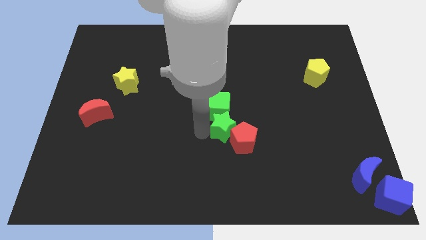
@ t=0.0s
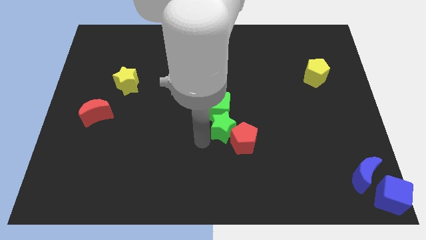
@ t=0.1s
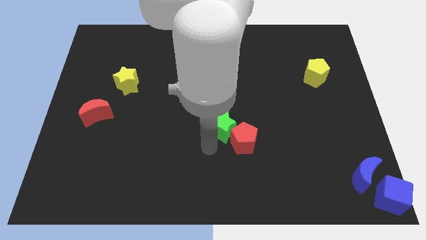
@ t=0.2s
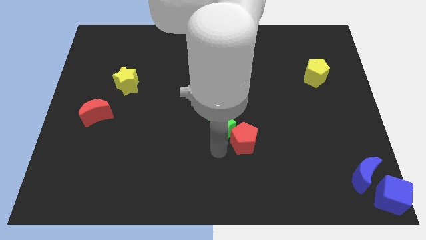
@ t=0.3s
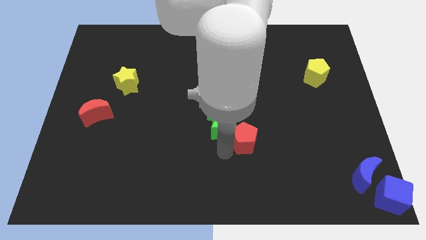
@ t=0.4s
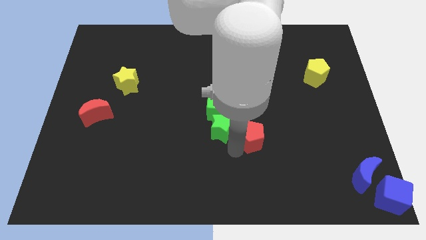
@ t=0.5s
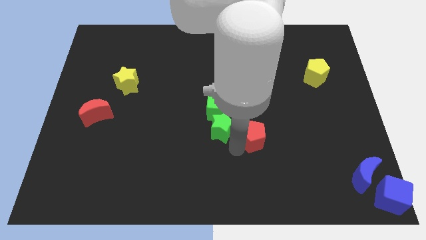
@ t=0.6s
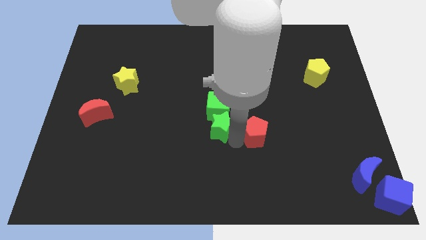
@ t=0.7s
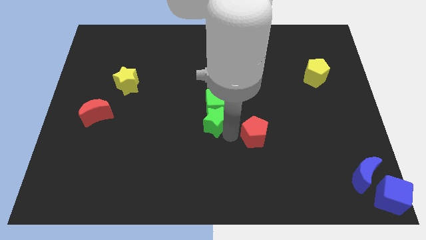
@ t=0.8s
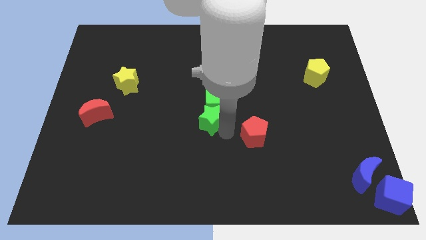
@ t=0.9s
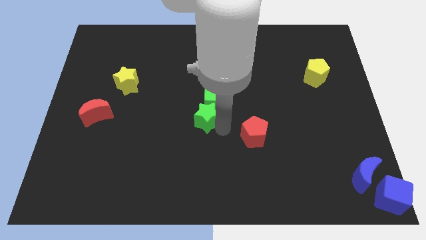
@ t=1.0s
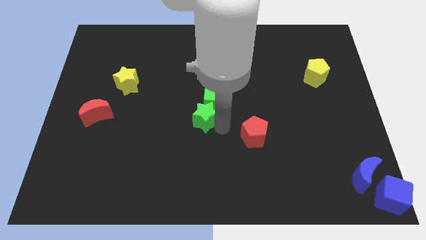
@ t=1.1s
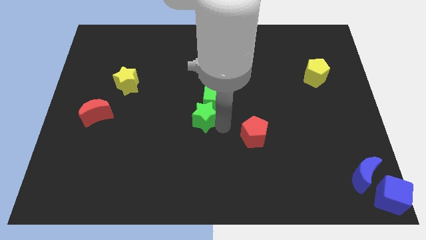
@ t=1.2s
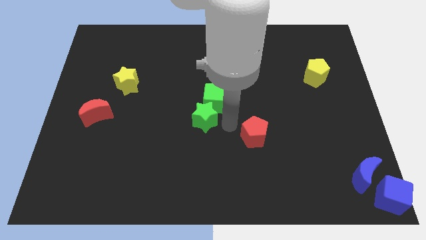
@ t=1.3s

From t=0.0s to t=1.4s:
move green block away from the red pentagon

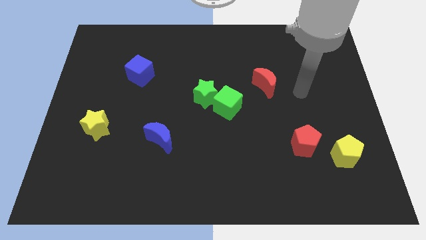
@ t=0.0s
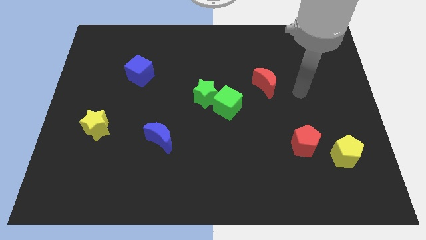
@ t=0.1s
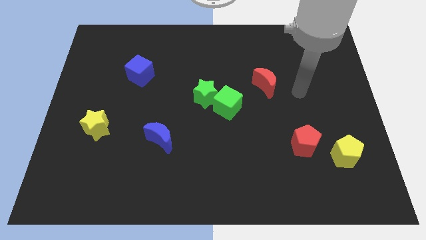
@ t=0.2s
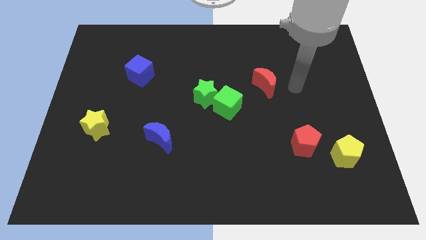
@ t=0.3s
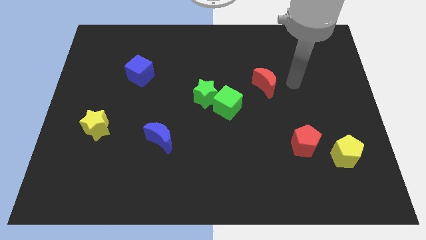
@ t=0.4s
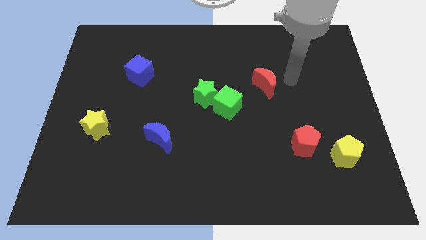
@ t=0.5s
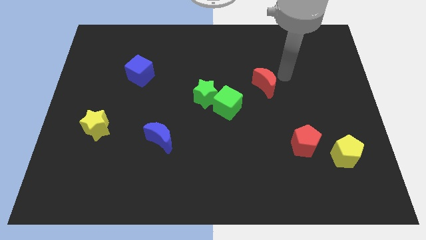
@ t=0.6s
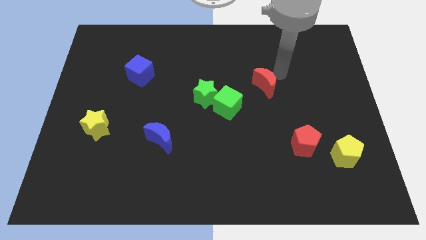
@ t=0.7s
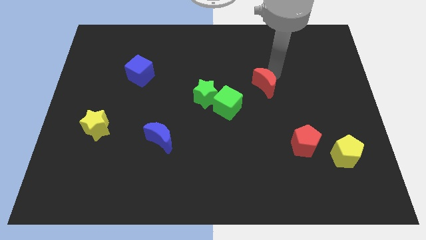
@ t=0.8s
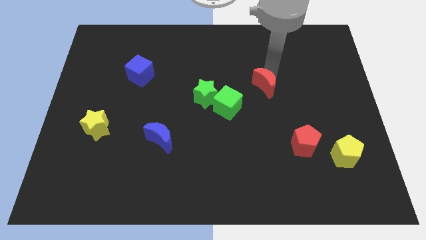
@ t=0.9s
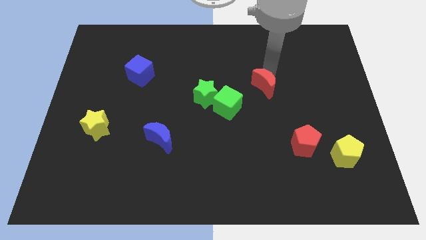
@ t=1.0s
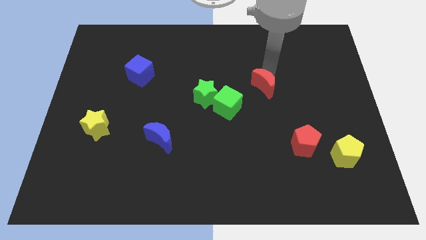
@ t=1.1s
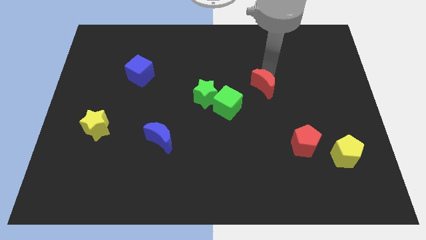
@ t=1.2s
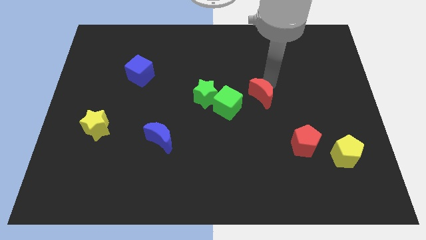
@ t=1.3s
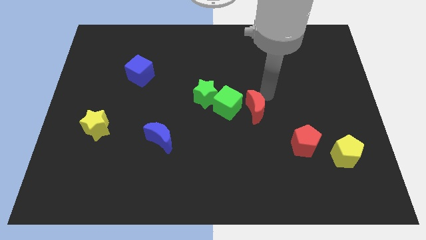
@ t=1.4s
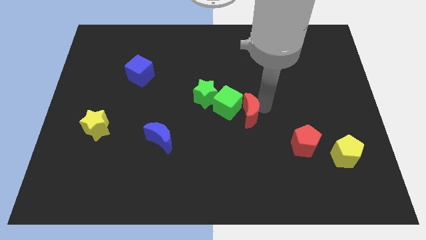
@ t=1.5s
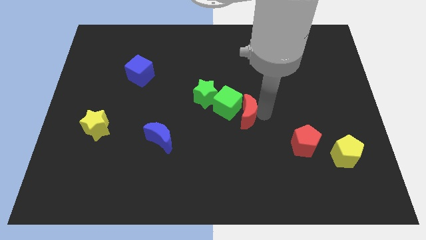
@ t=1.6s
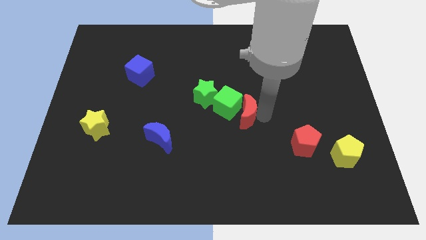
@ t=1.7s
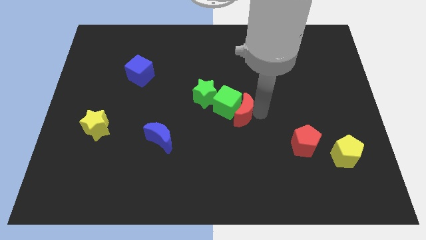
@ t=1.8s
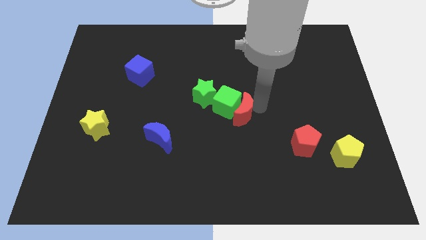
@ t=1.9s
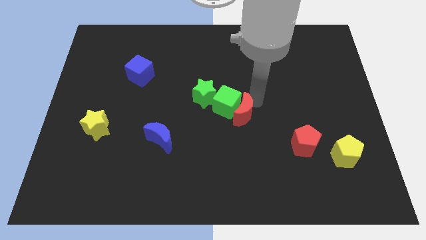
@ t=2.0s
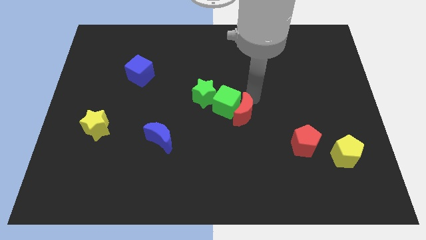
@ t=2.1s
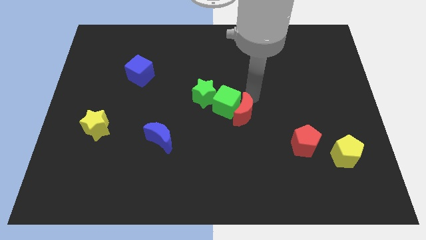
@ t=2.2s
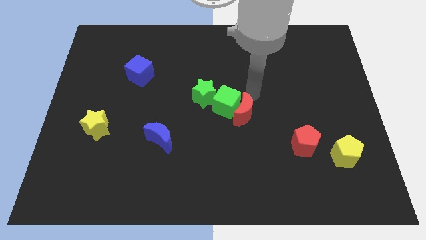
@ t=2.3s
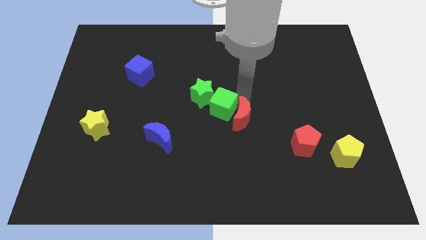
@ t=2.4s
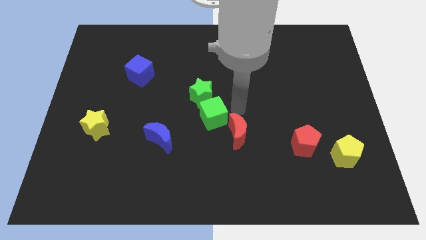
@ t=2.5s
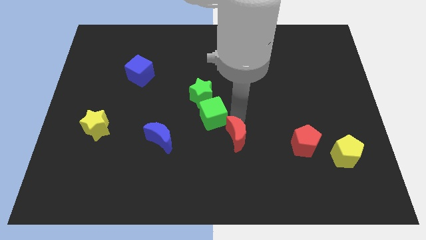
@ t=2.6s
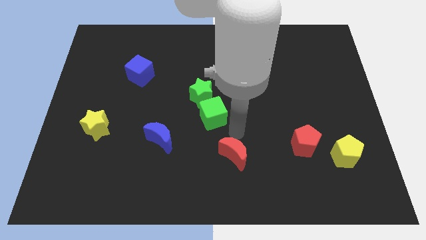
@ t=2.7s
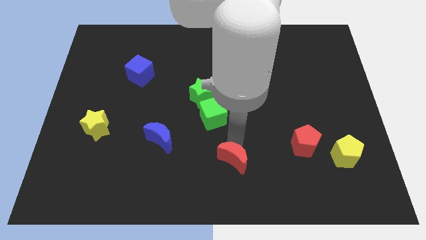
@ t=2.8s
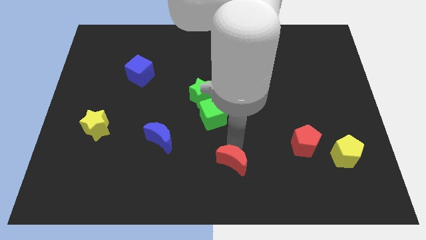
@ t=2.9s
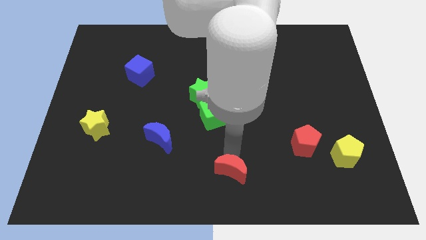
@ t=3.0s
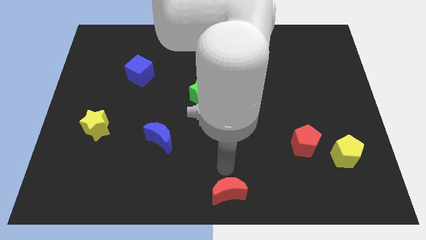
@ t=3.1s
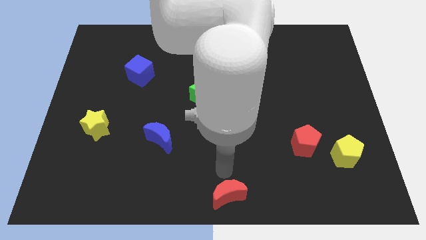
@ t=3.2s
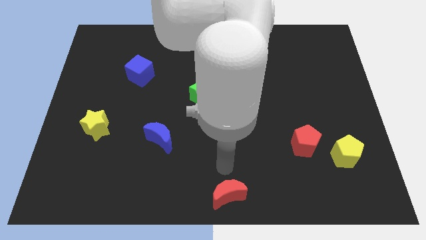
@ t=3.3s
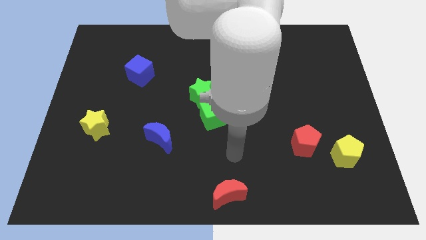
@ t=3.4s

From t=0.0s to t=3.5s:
move the red crescent towards the bottom center of the board

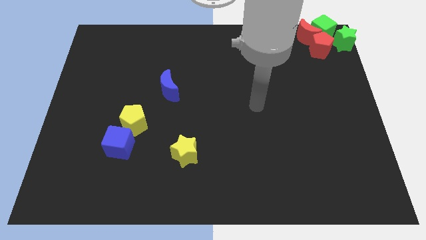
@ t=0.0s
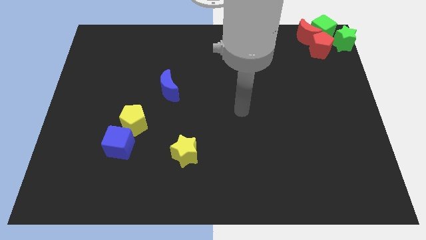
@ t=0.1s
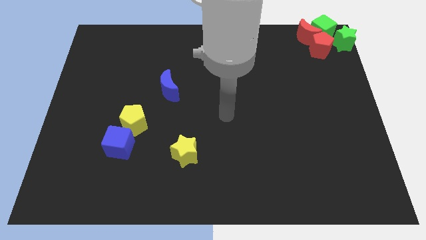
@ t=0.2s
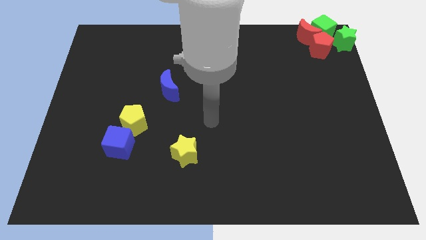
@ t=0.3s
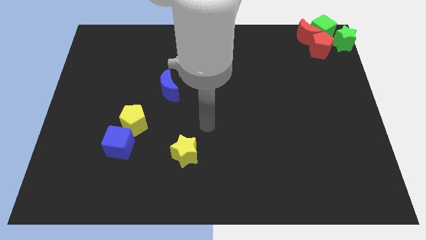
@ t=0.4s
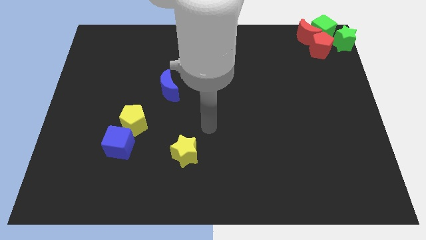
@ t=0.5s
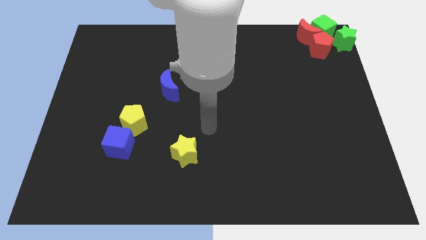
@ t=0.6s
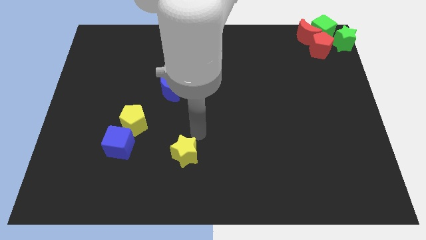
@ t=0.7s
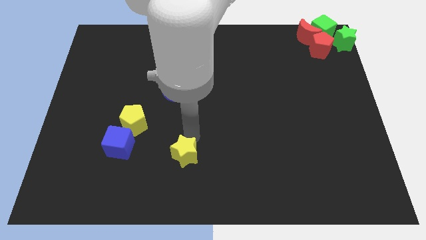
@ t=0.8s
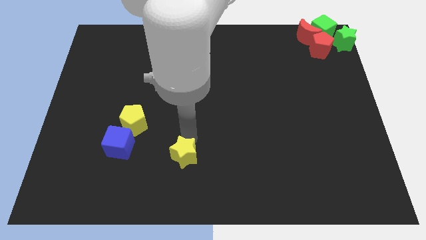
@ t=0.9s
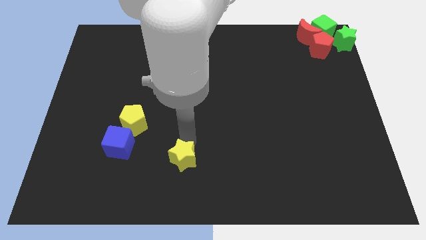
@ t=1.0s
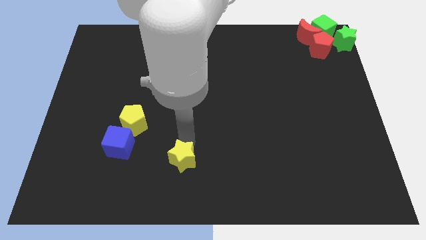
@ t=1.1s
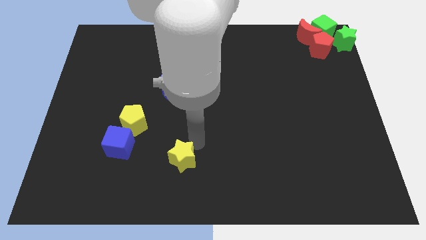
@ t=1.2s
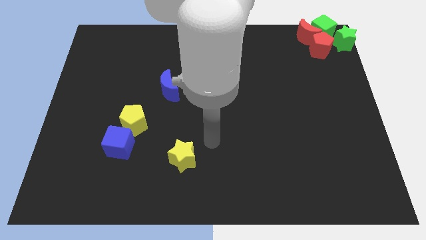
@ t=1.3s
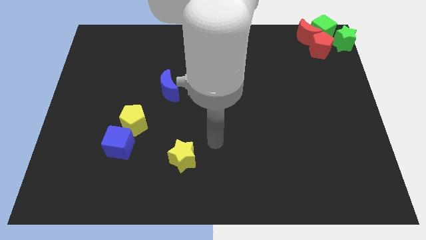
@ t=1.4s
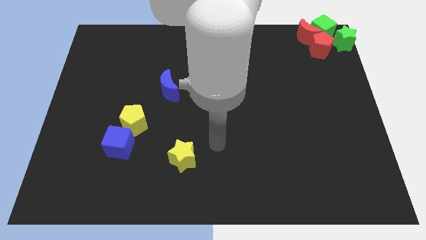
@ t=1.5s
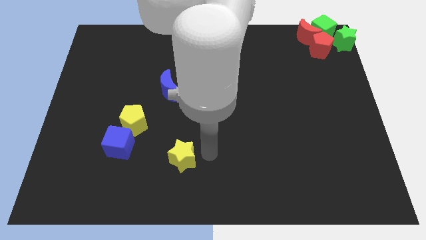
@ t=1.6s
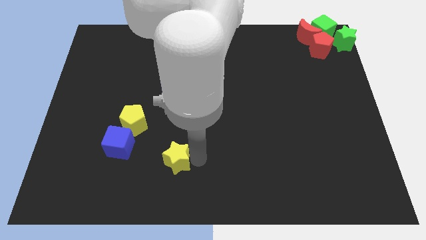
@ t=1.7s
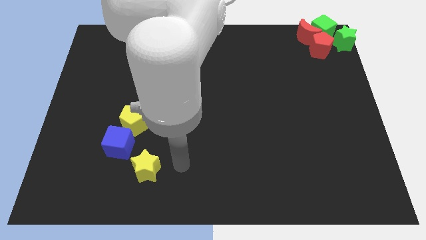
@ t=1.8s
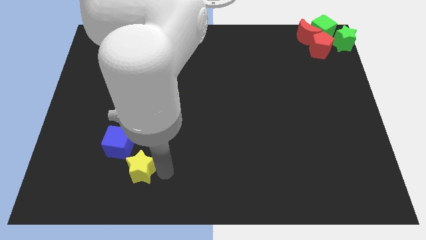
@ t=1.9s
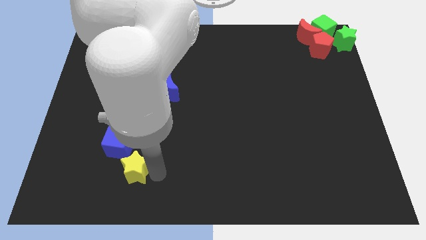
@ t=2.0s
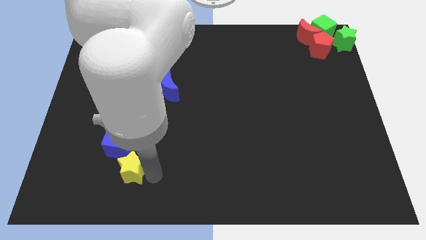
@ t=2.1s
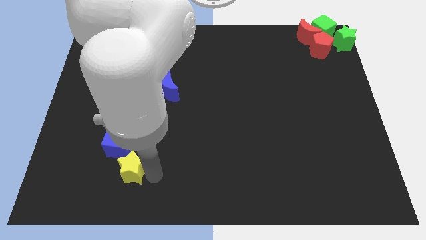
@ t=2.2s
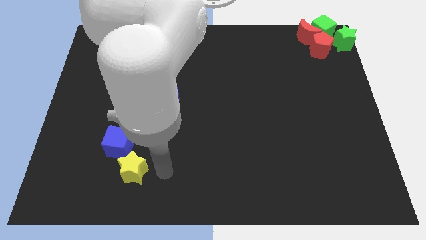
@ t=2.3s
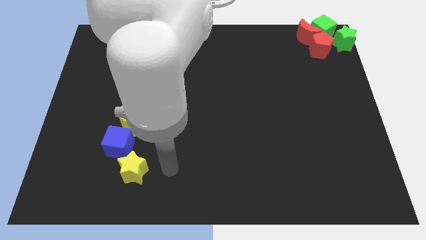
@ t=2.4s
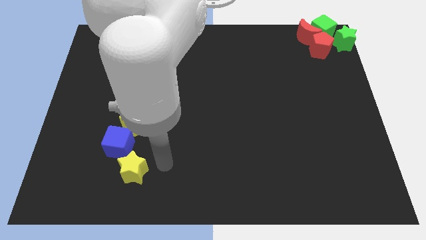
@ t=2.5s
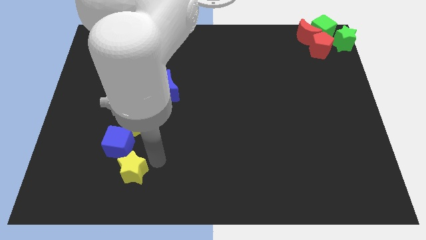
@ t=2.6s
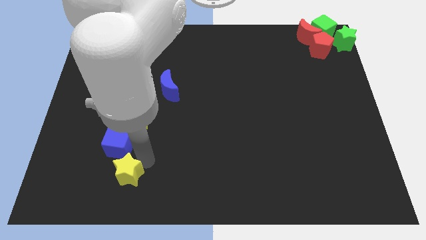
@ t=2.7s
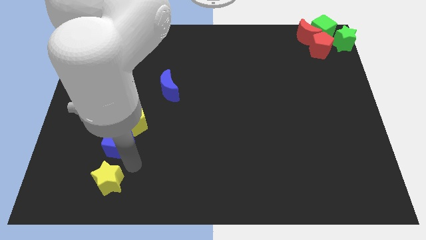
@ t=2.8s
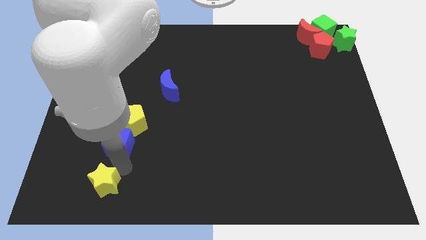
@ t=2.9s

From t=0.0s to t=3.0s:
move the yellow star to the bottom of the blue cube

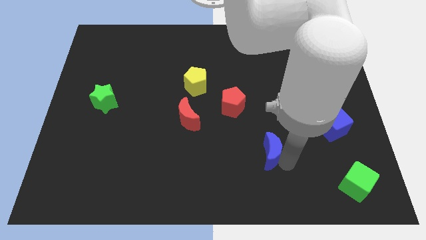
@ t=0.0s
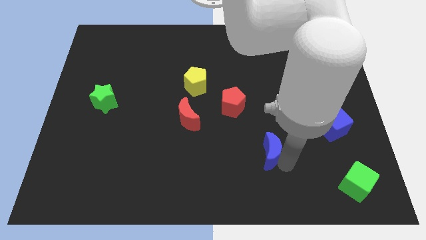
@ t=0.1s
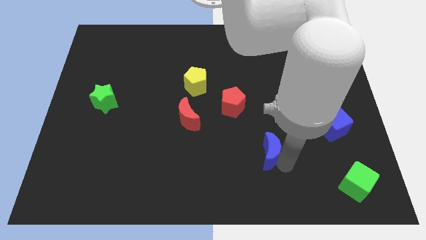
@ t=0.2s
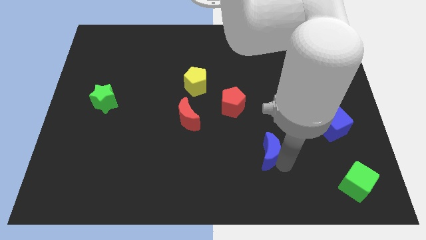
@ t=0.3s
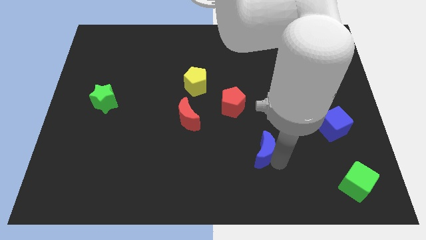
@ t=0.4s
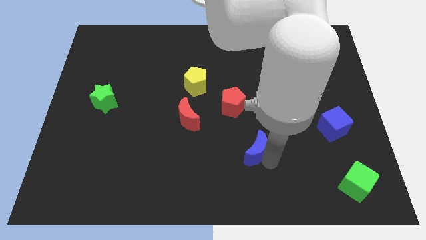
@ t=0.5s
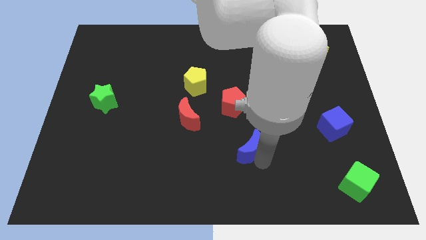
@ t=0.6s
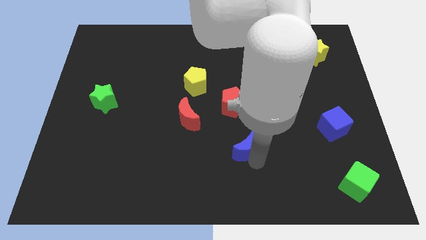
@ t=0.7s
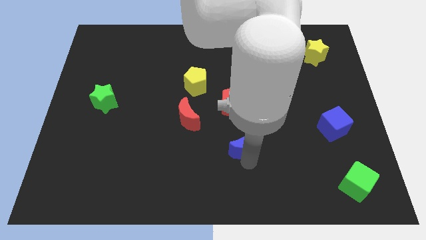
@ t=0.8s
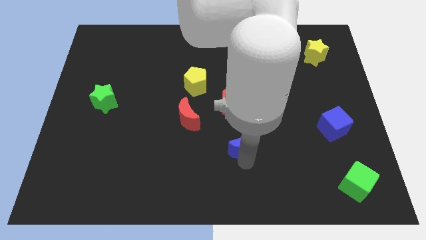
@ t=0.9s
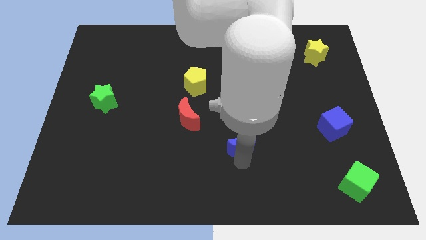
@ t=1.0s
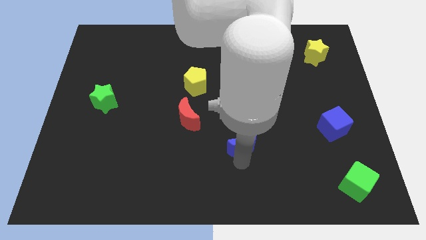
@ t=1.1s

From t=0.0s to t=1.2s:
place blue moon to the bottom of the red pentagon
